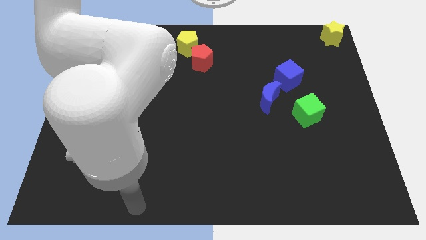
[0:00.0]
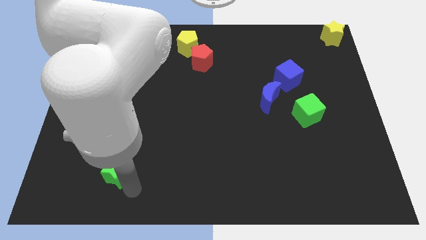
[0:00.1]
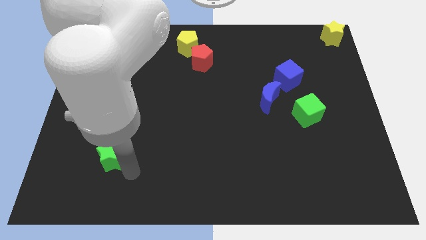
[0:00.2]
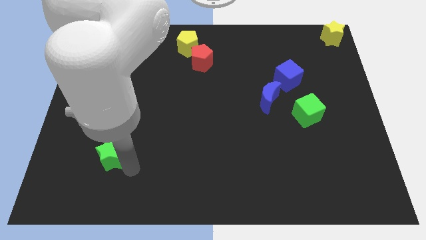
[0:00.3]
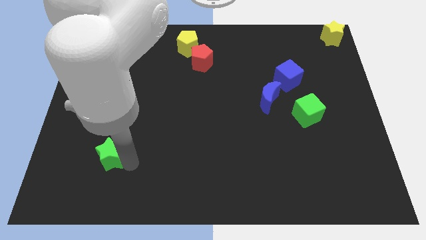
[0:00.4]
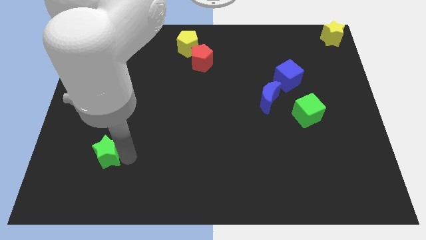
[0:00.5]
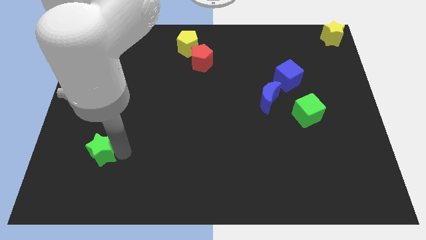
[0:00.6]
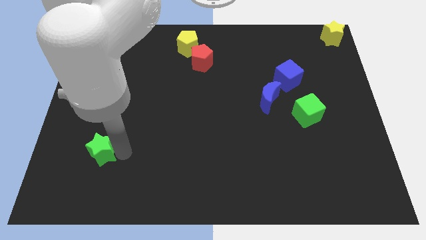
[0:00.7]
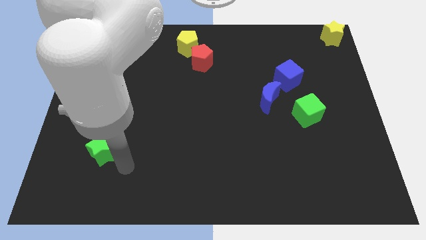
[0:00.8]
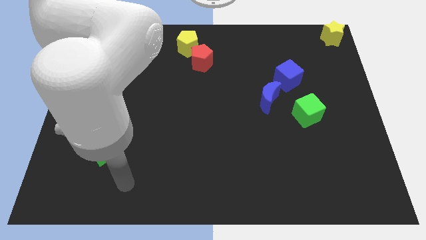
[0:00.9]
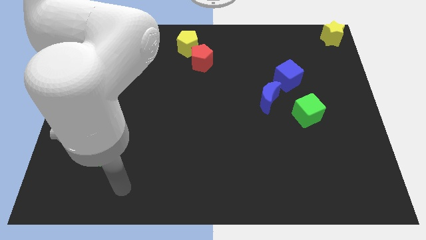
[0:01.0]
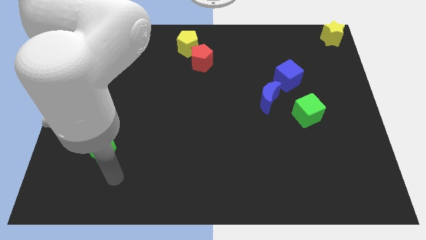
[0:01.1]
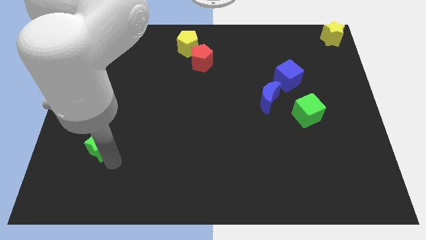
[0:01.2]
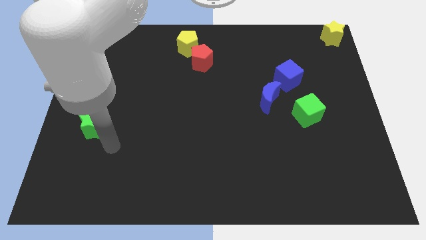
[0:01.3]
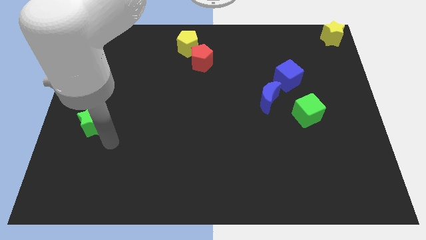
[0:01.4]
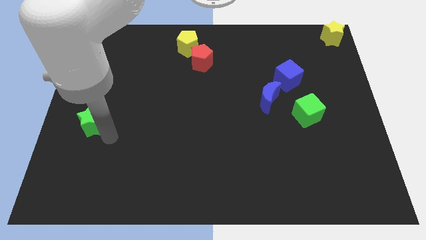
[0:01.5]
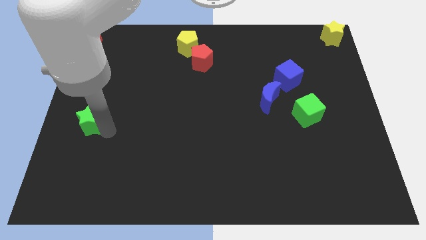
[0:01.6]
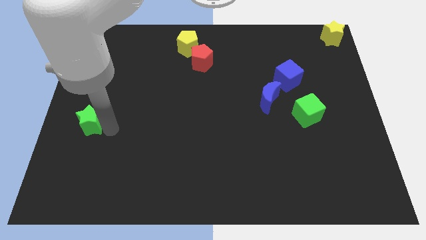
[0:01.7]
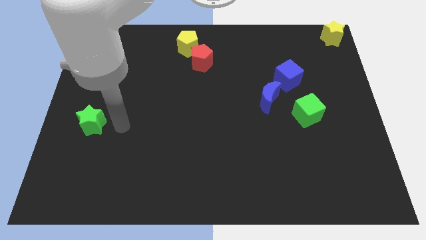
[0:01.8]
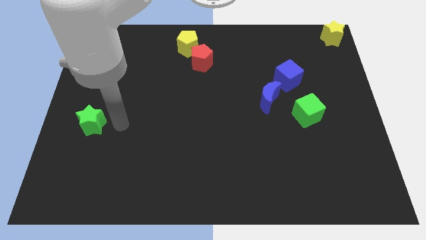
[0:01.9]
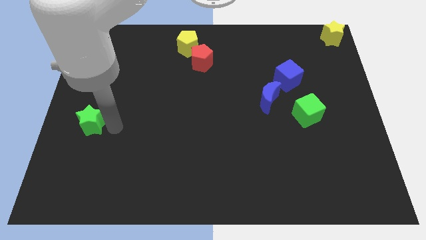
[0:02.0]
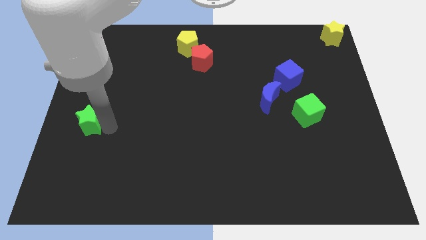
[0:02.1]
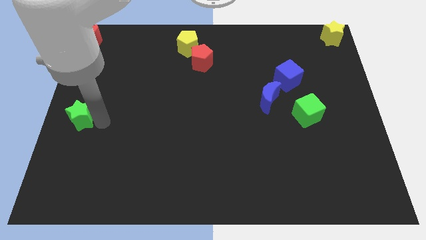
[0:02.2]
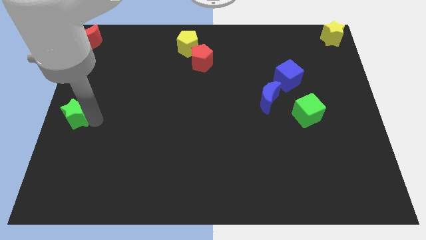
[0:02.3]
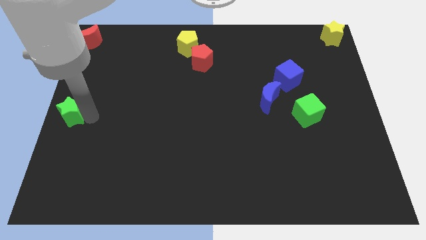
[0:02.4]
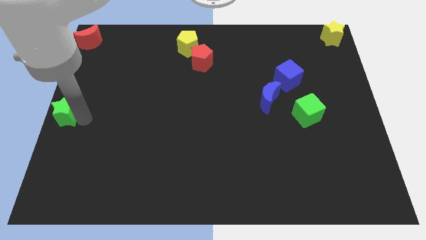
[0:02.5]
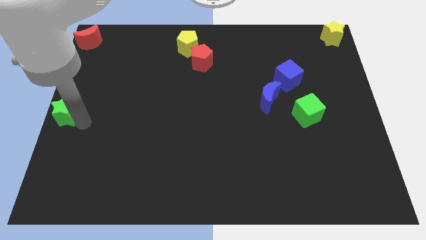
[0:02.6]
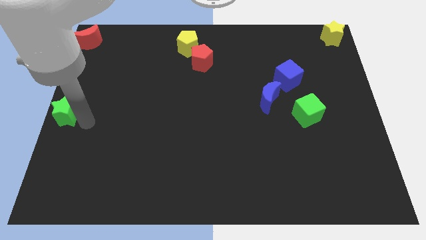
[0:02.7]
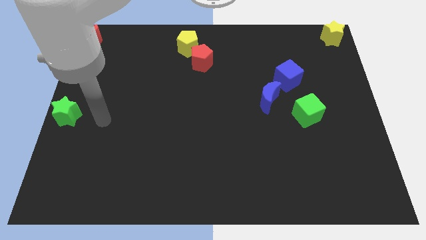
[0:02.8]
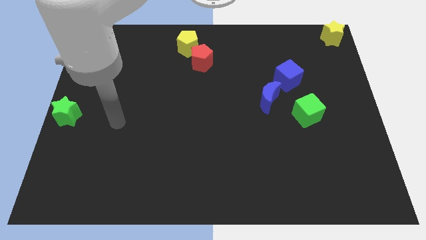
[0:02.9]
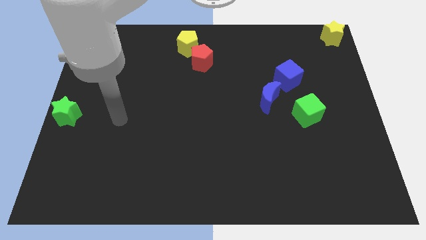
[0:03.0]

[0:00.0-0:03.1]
place the green star at the center left side of the board

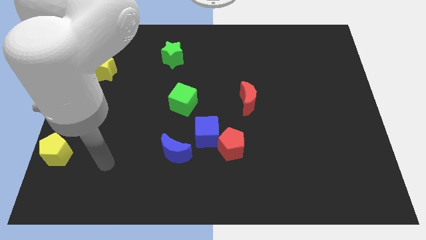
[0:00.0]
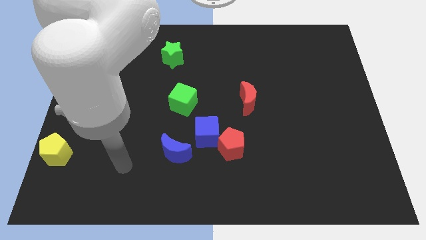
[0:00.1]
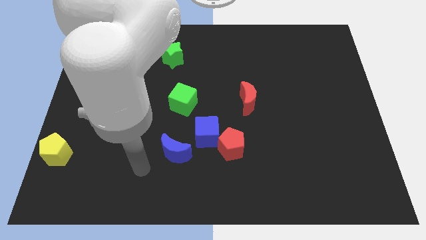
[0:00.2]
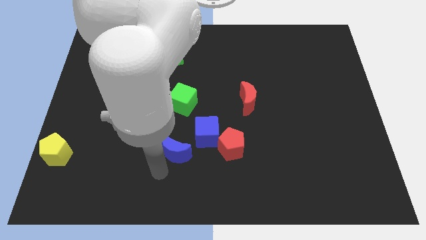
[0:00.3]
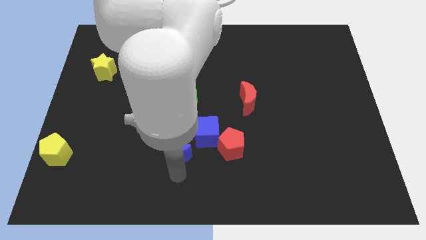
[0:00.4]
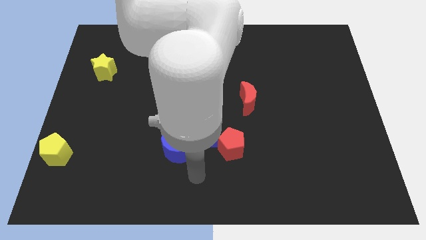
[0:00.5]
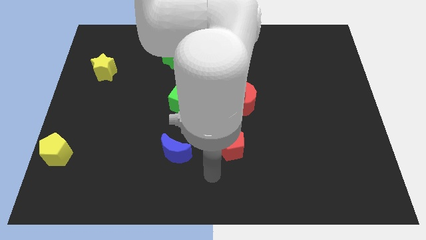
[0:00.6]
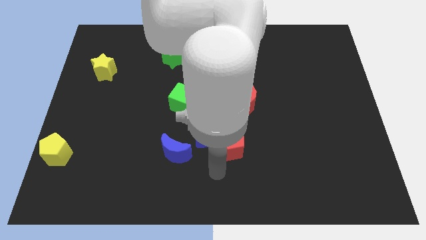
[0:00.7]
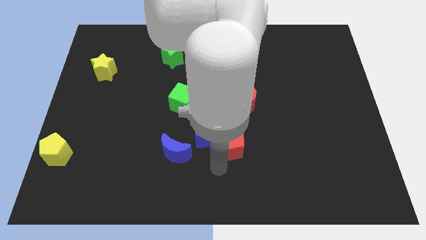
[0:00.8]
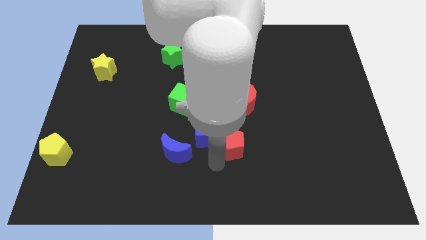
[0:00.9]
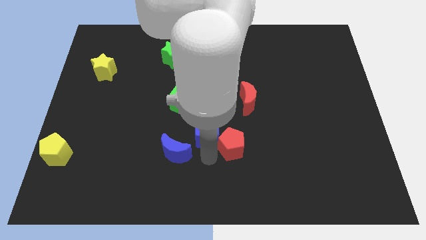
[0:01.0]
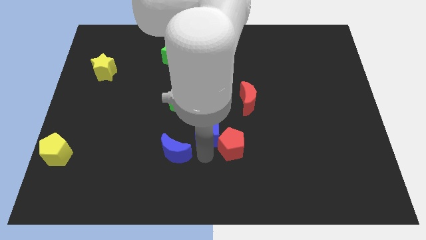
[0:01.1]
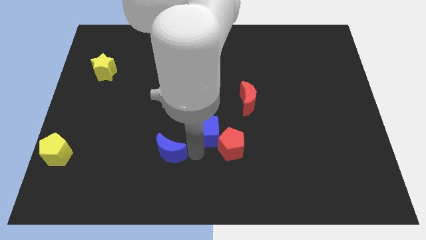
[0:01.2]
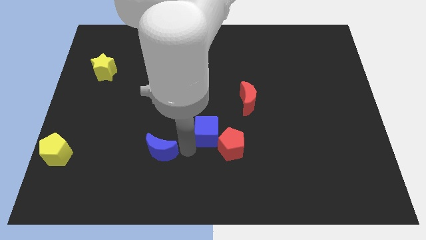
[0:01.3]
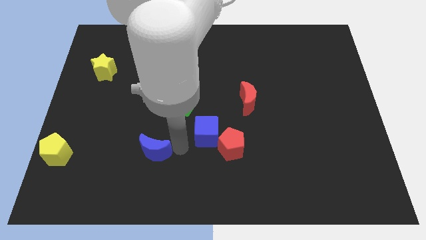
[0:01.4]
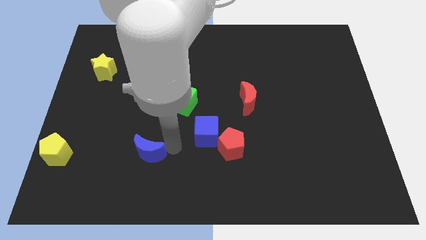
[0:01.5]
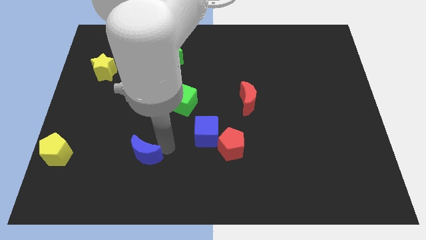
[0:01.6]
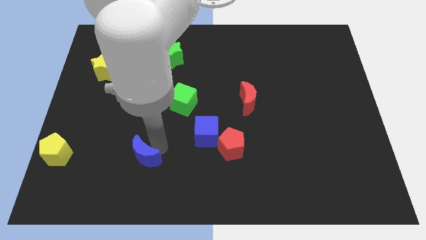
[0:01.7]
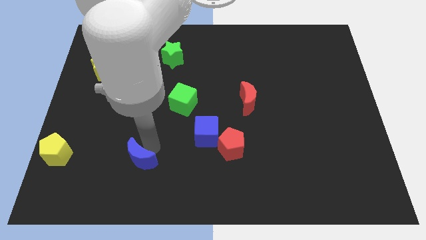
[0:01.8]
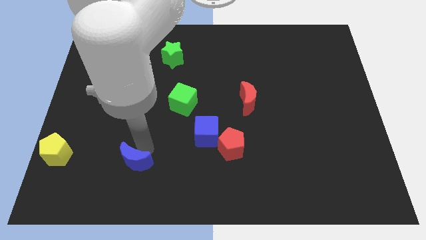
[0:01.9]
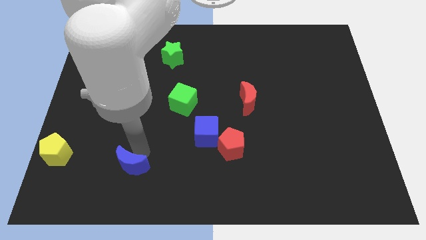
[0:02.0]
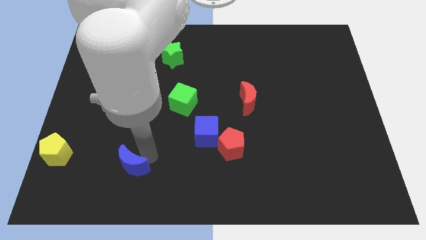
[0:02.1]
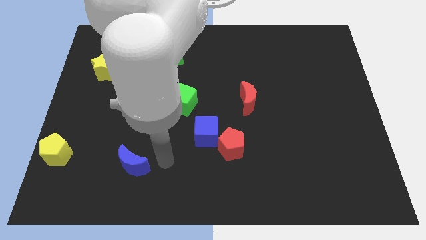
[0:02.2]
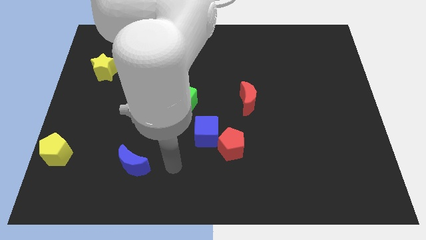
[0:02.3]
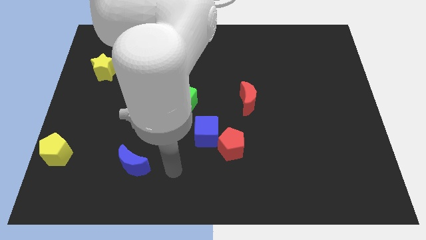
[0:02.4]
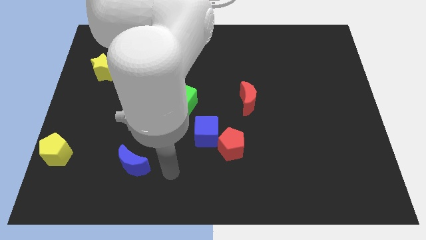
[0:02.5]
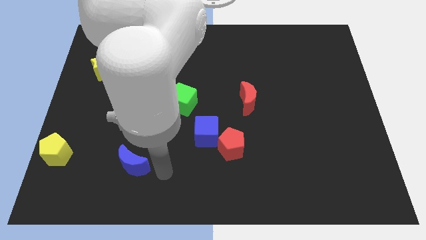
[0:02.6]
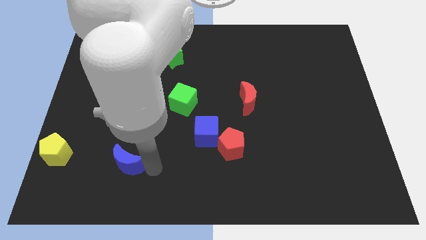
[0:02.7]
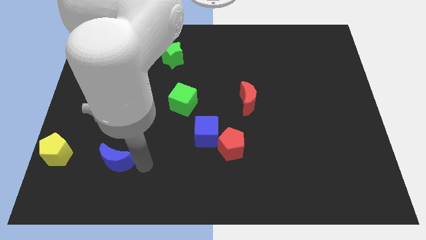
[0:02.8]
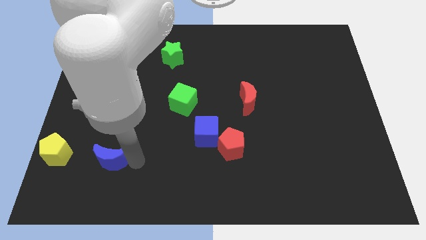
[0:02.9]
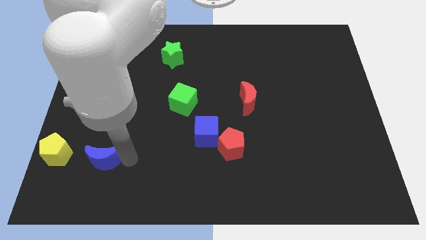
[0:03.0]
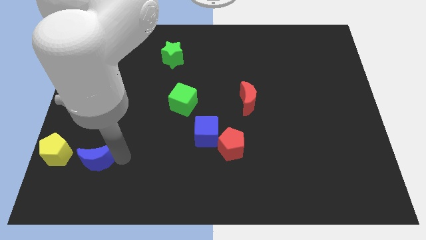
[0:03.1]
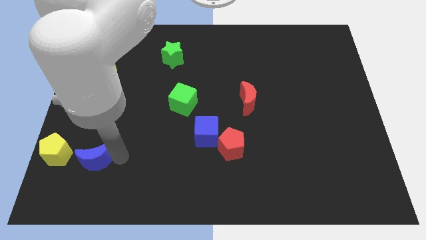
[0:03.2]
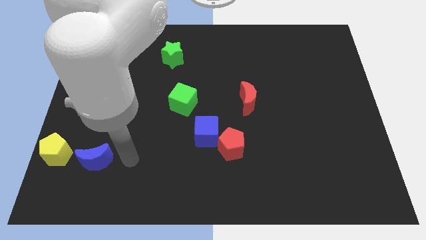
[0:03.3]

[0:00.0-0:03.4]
move the blue moon to the left side

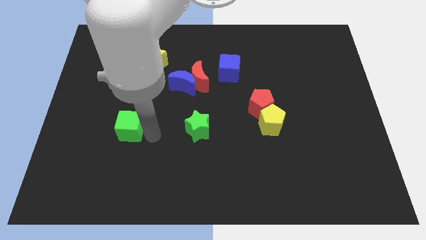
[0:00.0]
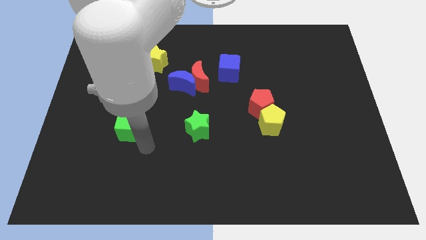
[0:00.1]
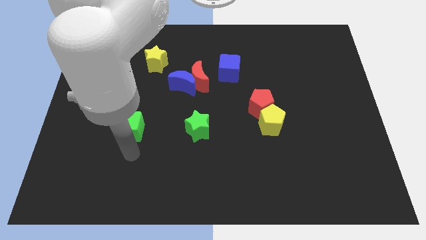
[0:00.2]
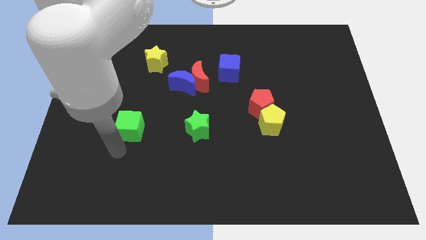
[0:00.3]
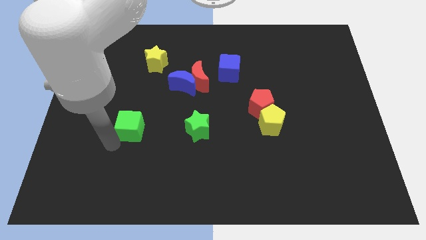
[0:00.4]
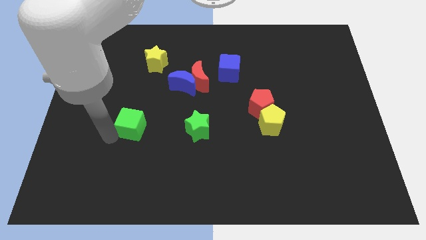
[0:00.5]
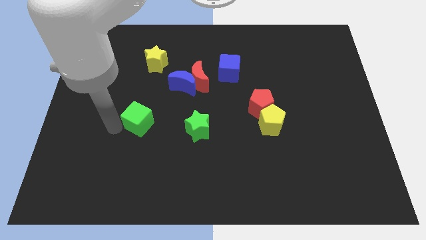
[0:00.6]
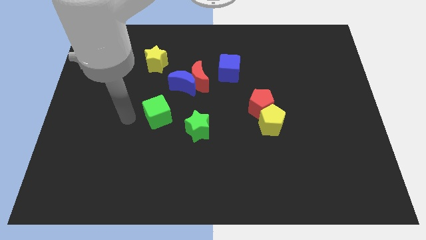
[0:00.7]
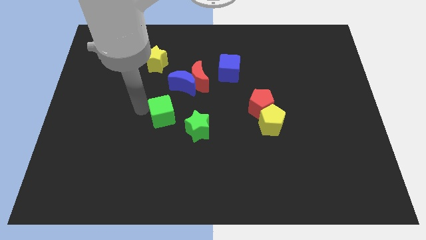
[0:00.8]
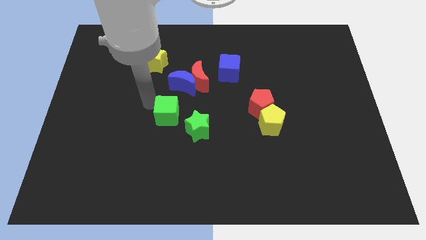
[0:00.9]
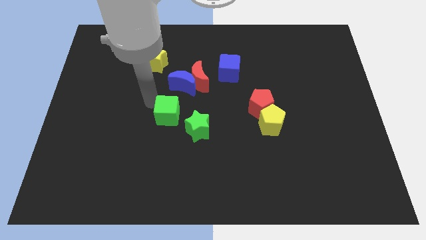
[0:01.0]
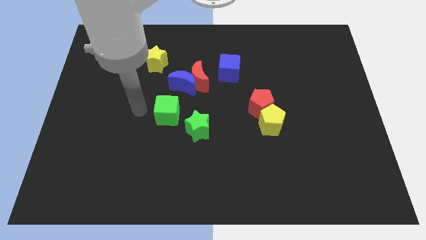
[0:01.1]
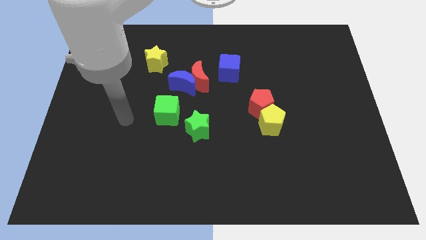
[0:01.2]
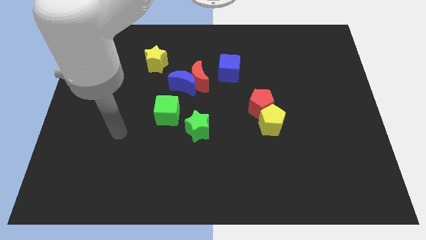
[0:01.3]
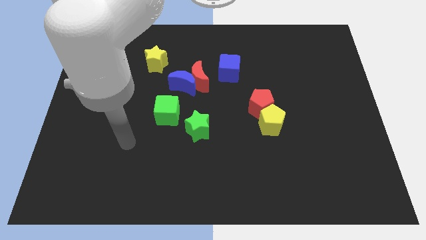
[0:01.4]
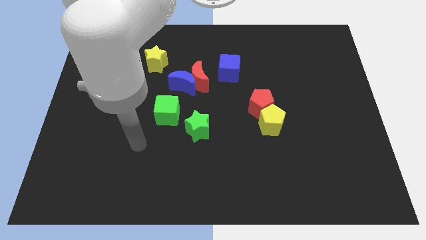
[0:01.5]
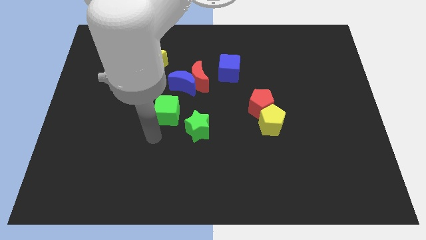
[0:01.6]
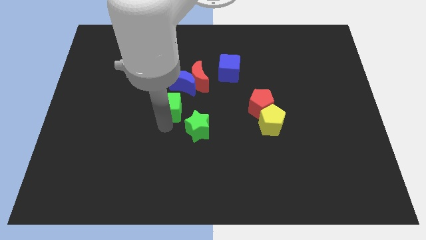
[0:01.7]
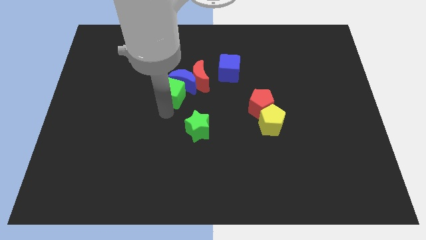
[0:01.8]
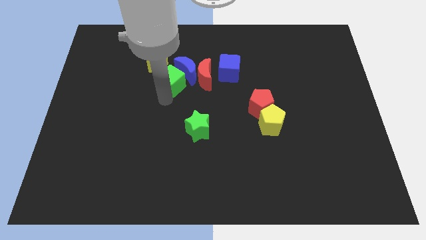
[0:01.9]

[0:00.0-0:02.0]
push green cube into blue moon

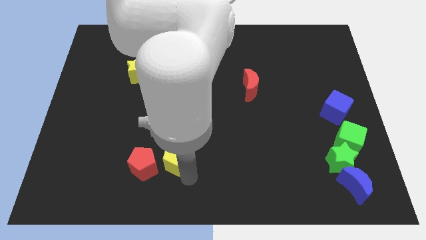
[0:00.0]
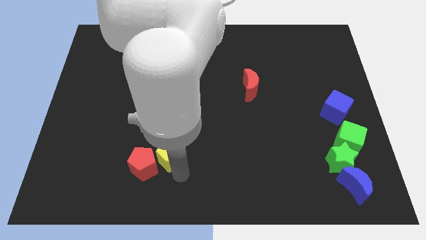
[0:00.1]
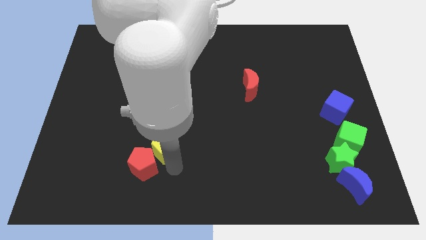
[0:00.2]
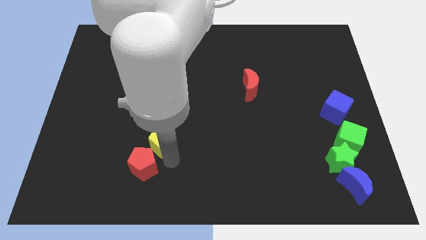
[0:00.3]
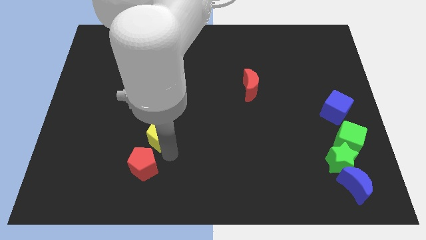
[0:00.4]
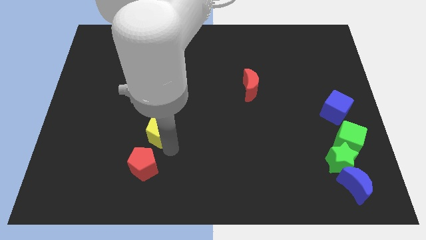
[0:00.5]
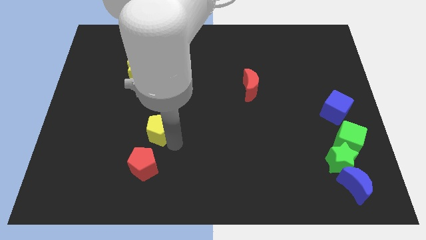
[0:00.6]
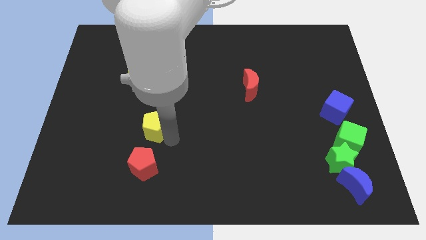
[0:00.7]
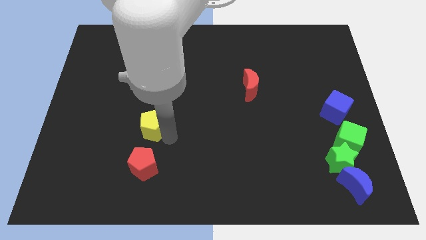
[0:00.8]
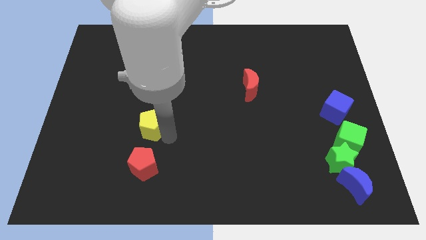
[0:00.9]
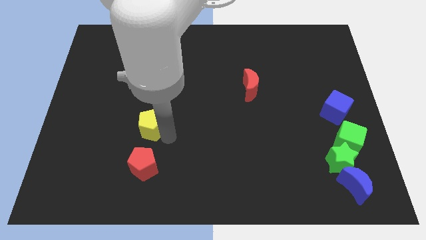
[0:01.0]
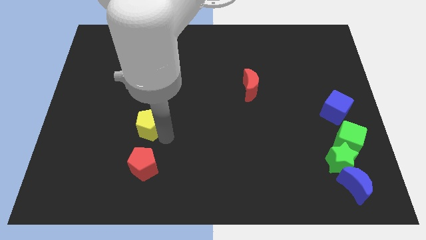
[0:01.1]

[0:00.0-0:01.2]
push the yellow pentagon vertically up to the red pentagon
